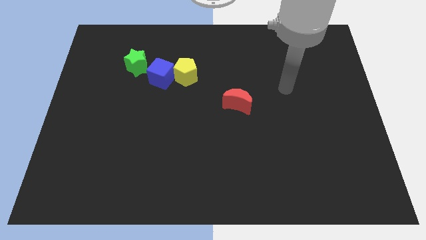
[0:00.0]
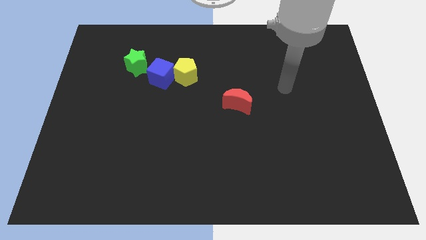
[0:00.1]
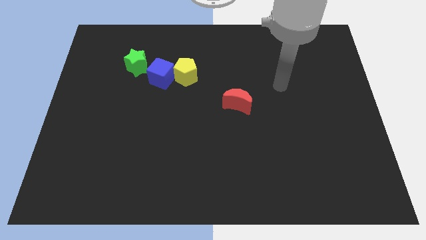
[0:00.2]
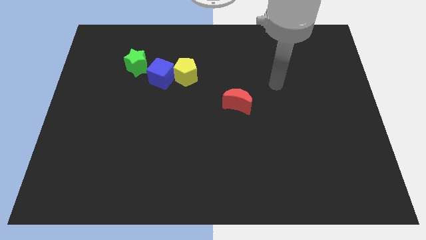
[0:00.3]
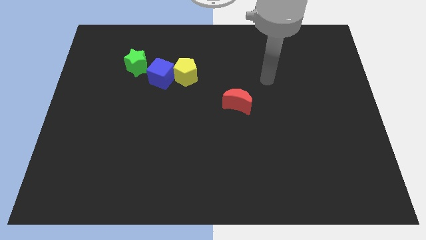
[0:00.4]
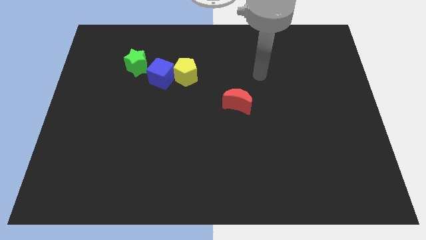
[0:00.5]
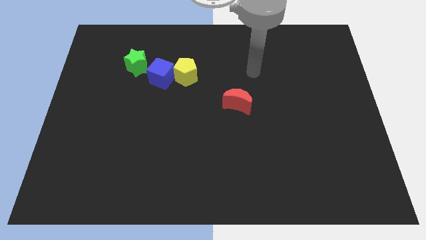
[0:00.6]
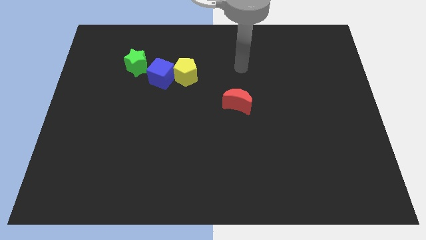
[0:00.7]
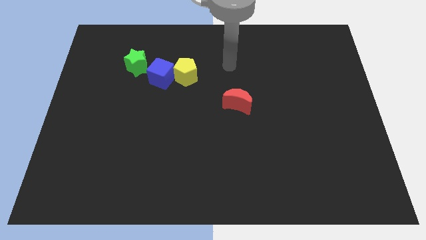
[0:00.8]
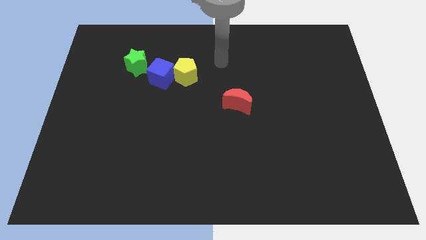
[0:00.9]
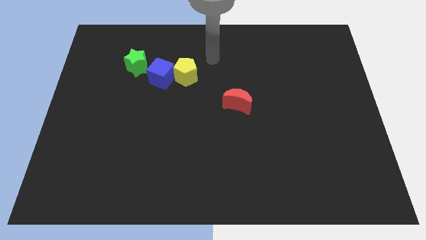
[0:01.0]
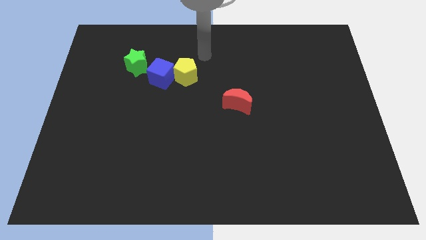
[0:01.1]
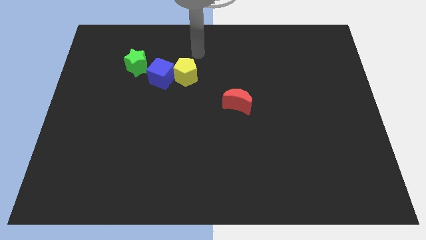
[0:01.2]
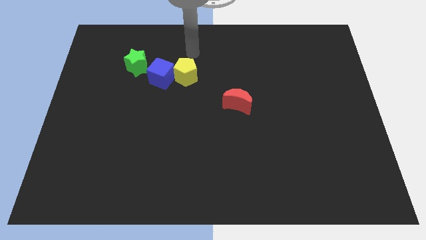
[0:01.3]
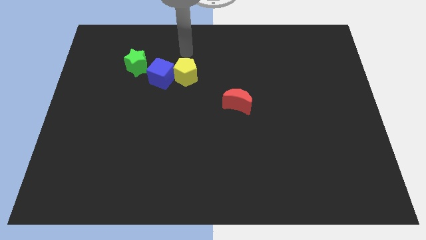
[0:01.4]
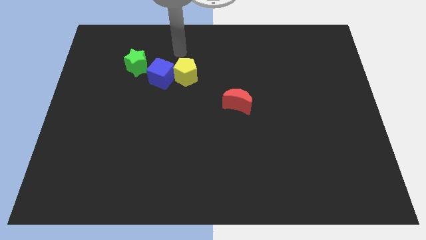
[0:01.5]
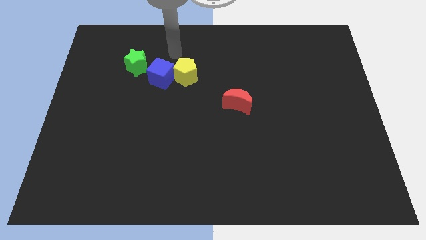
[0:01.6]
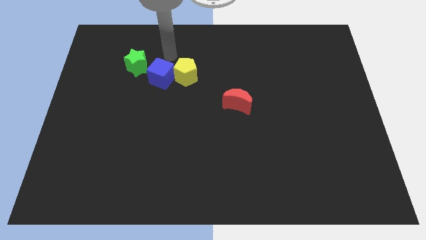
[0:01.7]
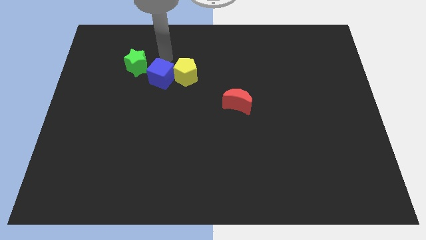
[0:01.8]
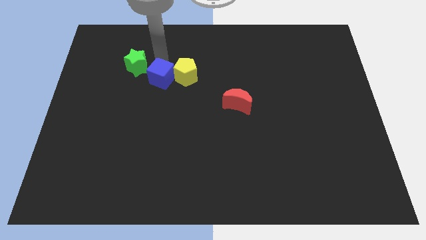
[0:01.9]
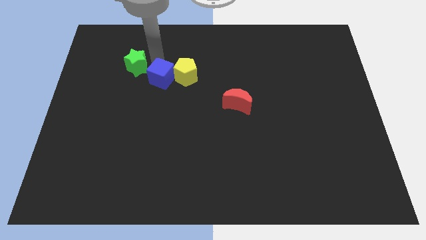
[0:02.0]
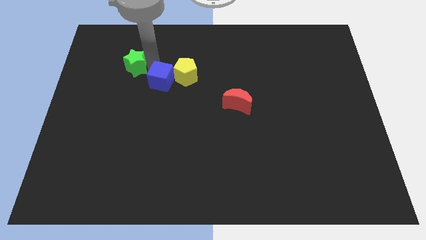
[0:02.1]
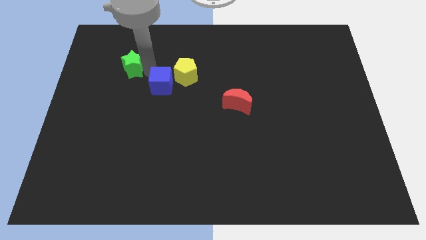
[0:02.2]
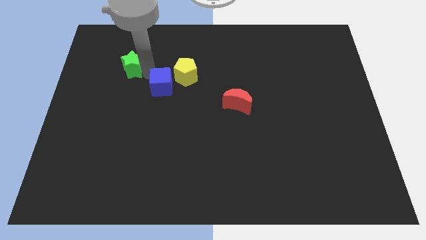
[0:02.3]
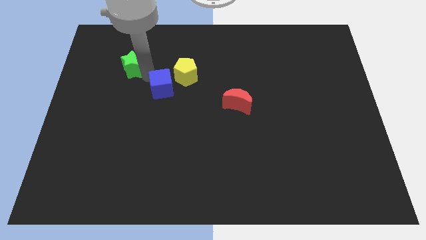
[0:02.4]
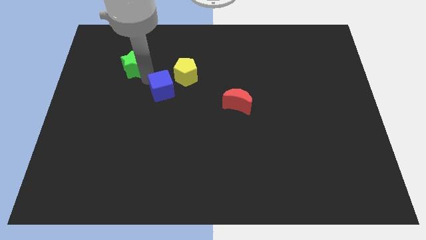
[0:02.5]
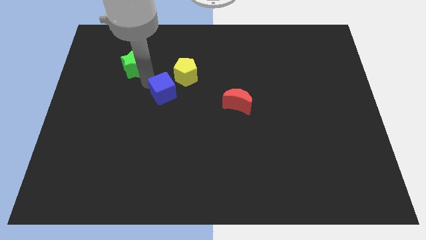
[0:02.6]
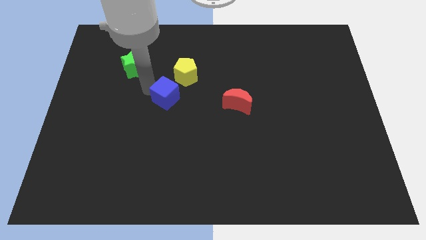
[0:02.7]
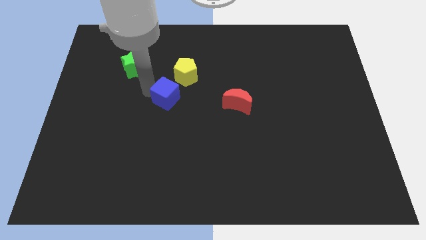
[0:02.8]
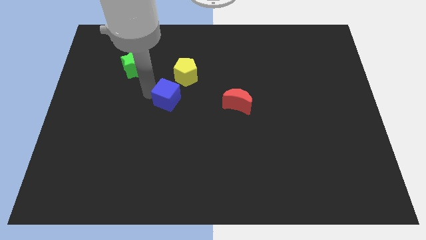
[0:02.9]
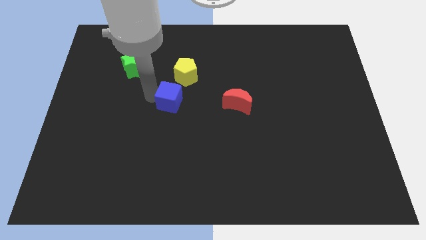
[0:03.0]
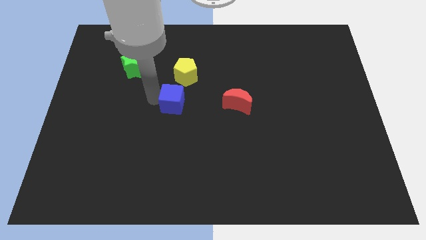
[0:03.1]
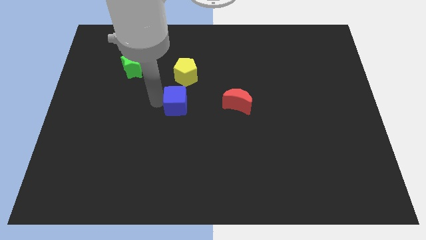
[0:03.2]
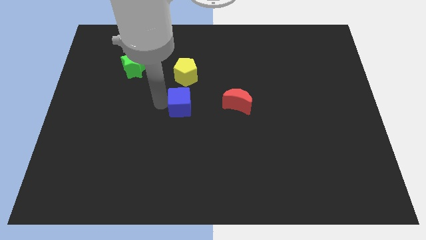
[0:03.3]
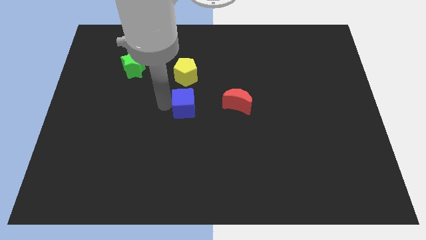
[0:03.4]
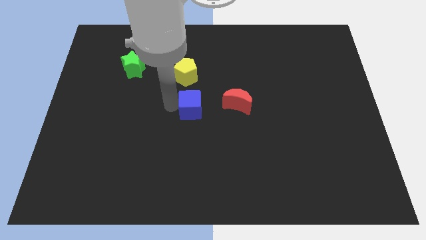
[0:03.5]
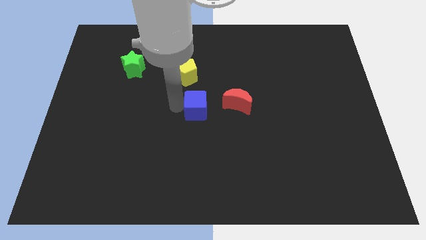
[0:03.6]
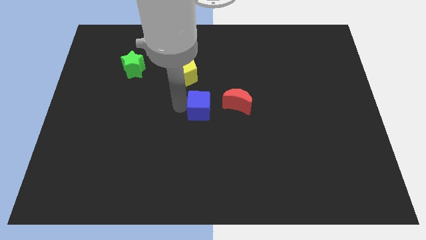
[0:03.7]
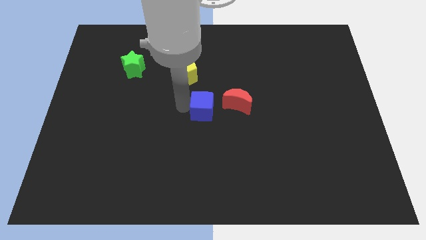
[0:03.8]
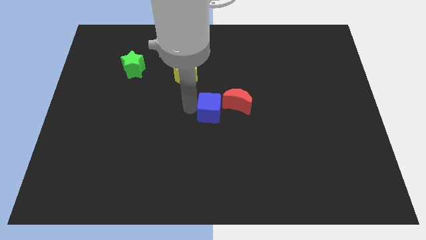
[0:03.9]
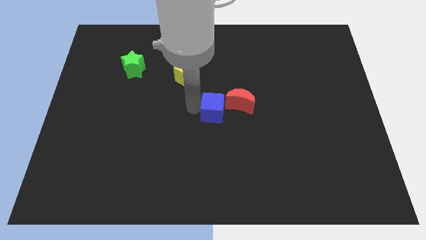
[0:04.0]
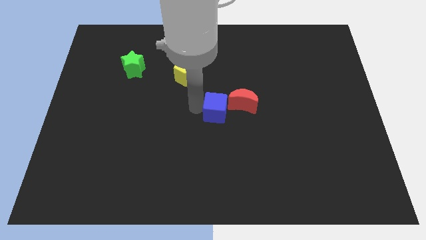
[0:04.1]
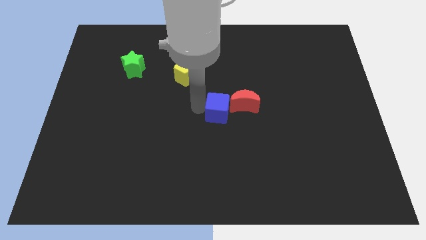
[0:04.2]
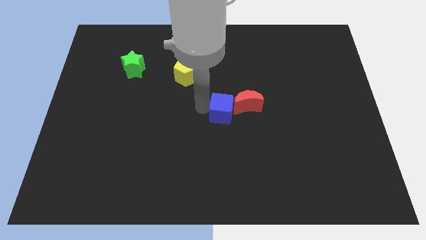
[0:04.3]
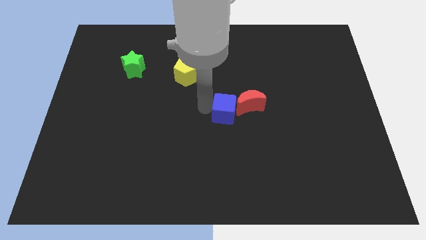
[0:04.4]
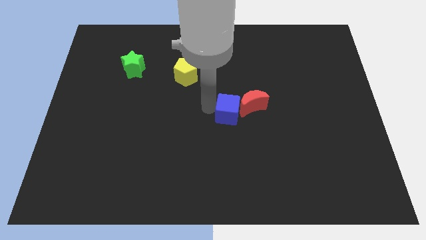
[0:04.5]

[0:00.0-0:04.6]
slide the blue cube next to the moon

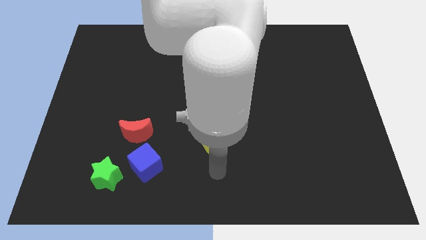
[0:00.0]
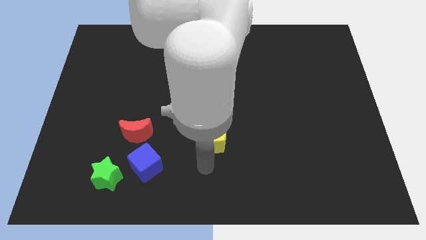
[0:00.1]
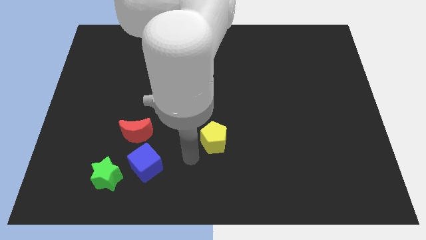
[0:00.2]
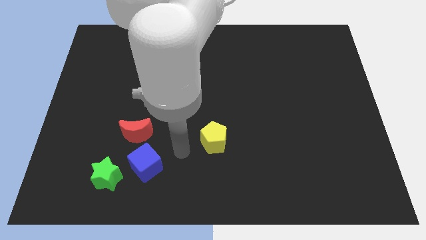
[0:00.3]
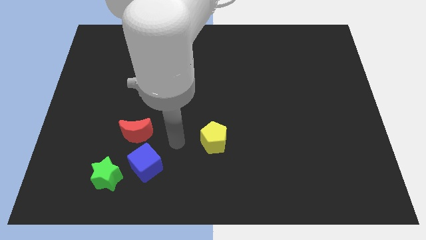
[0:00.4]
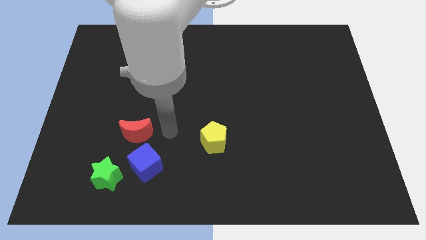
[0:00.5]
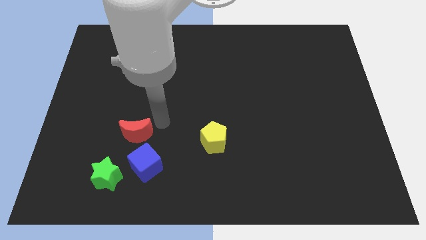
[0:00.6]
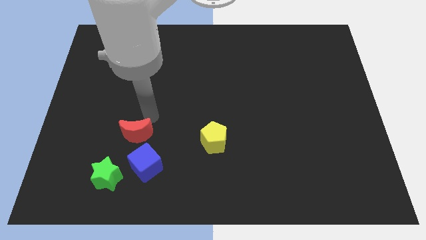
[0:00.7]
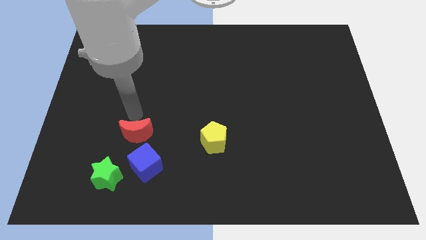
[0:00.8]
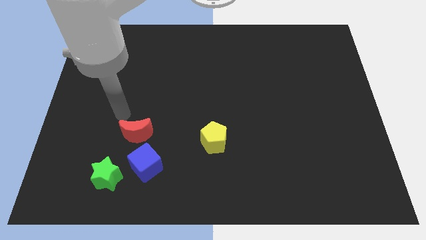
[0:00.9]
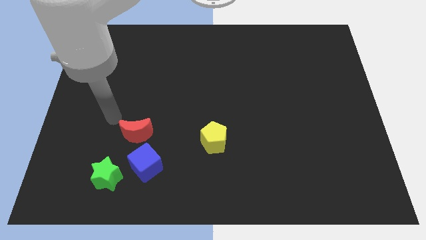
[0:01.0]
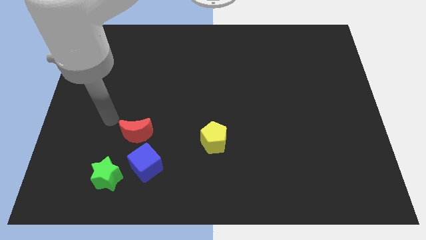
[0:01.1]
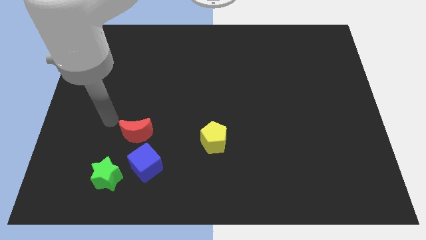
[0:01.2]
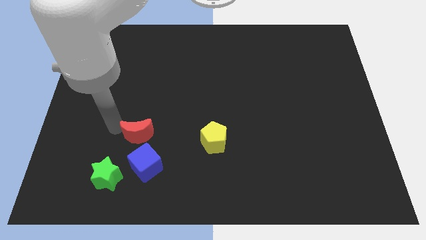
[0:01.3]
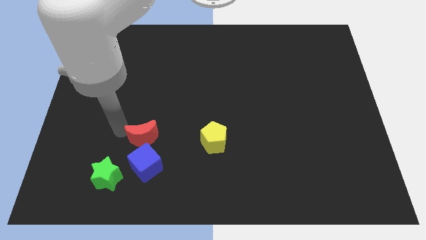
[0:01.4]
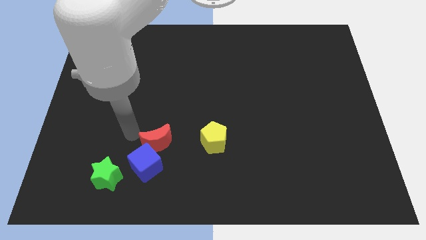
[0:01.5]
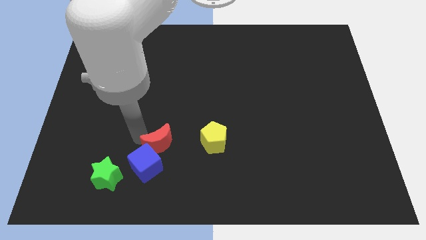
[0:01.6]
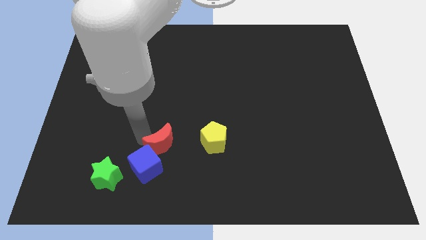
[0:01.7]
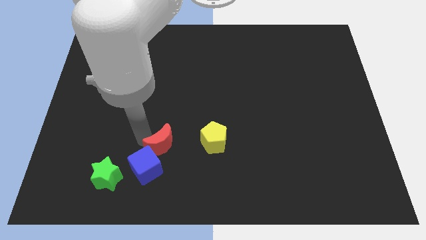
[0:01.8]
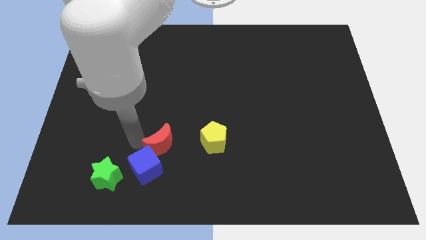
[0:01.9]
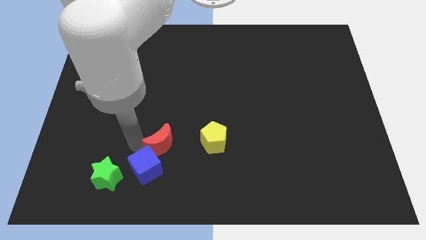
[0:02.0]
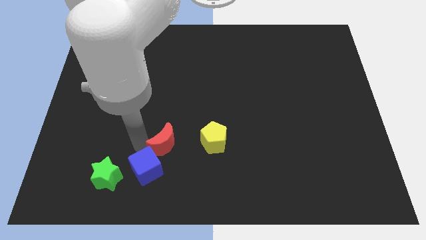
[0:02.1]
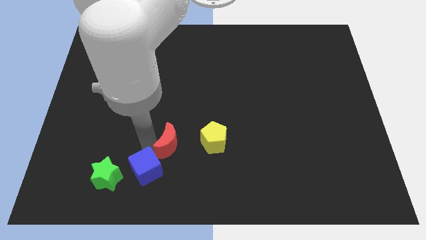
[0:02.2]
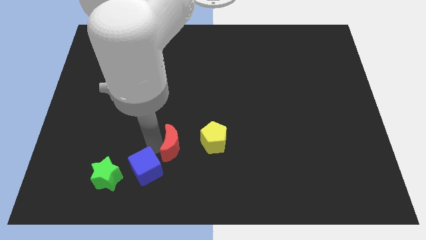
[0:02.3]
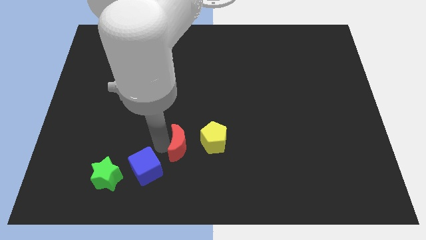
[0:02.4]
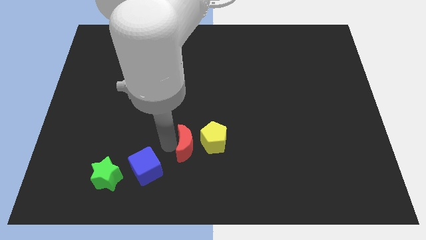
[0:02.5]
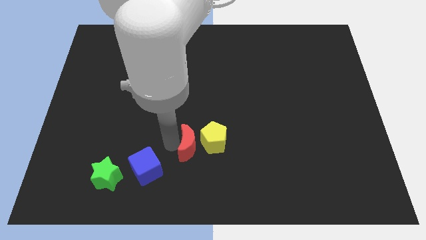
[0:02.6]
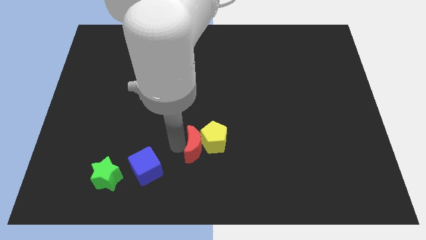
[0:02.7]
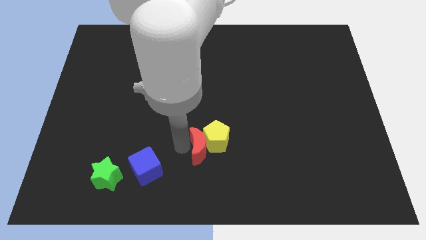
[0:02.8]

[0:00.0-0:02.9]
put the red block next to the yellow pentagon

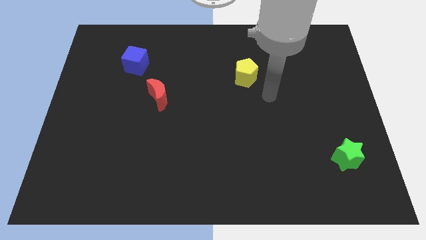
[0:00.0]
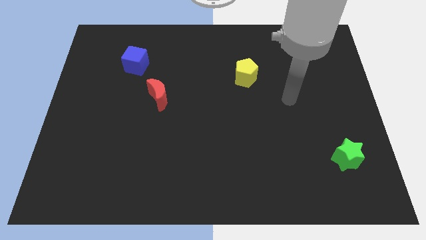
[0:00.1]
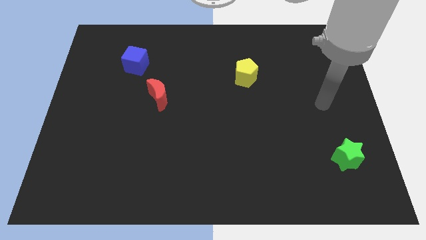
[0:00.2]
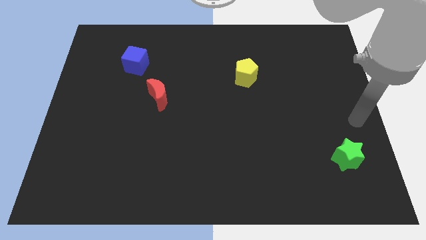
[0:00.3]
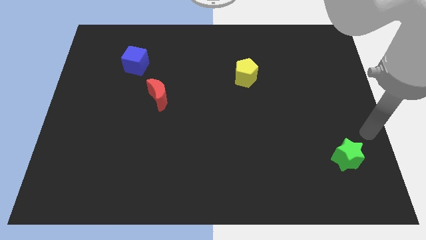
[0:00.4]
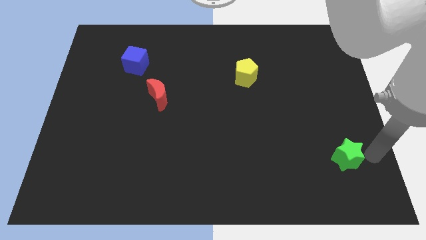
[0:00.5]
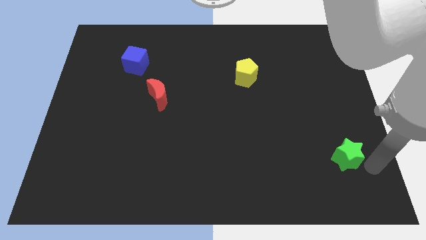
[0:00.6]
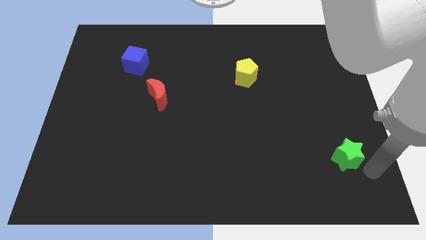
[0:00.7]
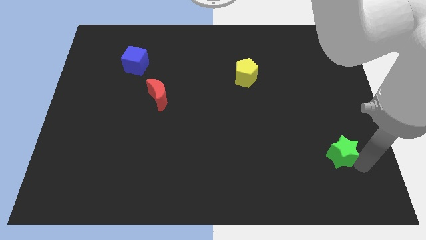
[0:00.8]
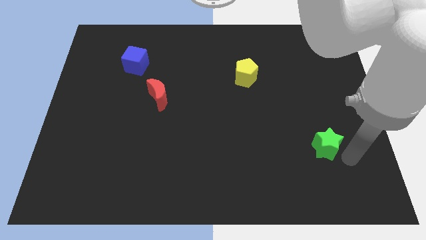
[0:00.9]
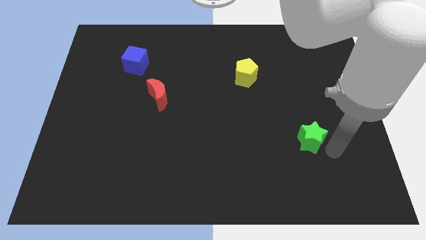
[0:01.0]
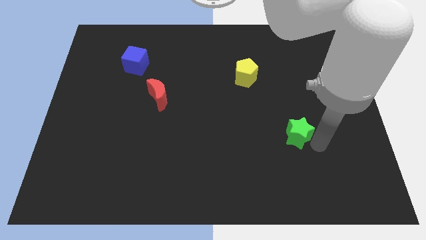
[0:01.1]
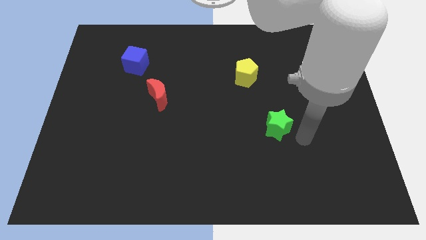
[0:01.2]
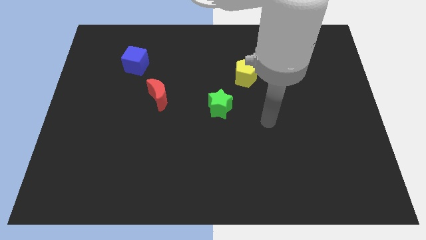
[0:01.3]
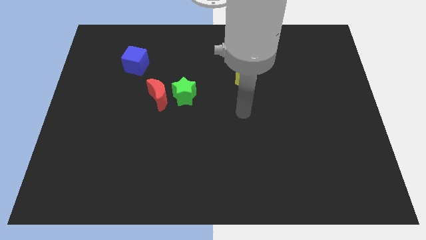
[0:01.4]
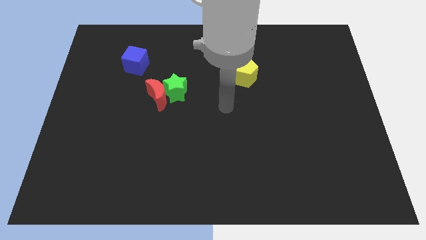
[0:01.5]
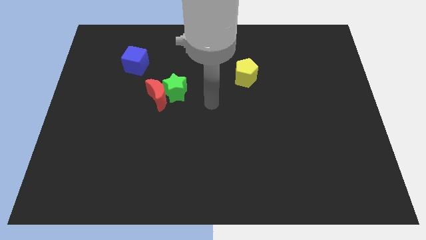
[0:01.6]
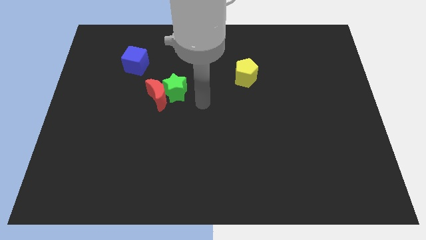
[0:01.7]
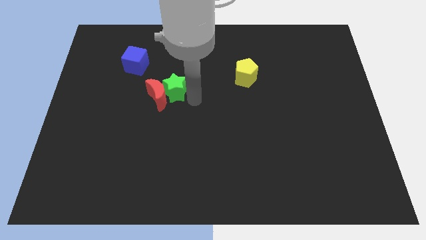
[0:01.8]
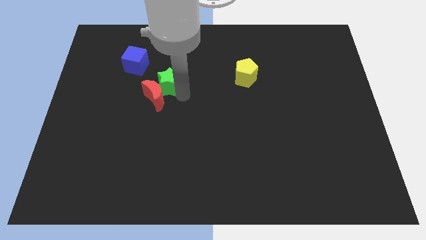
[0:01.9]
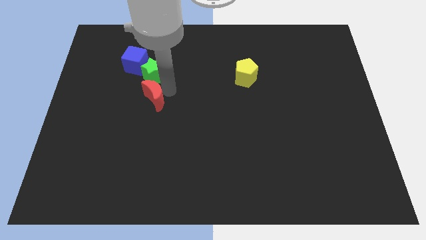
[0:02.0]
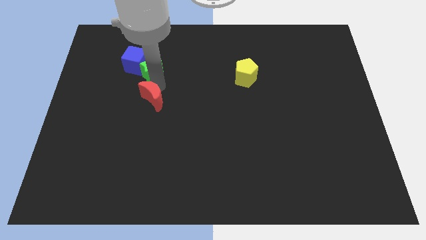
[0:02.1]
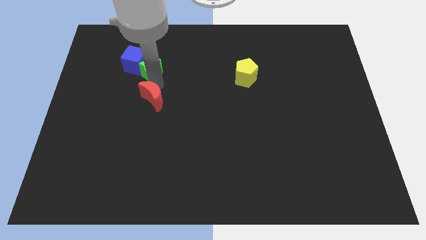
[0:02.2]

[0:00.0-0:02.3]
slide the star to the blue block
